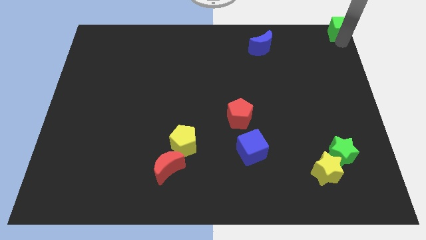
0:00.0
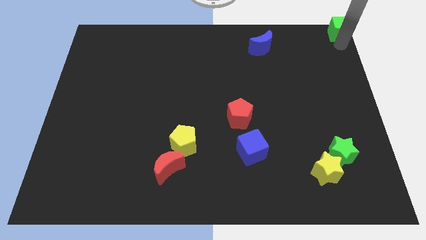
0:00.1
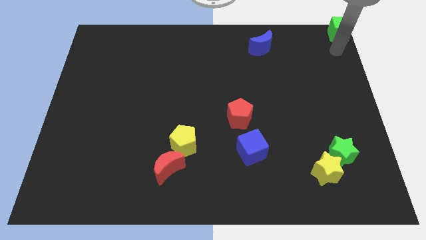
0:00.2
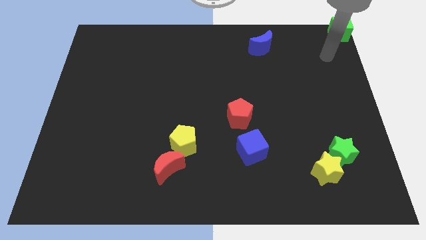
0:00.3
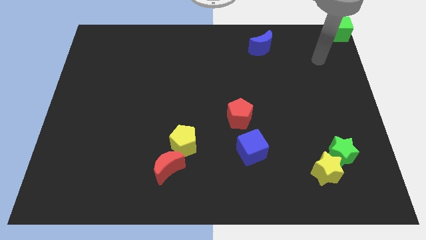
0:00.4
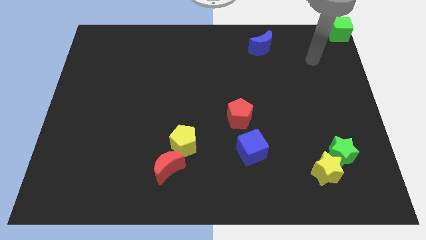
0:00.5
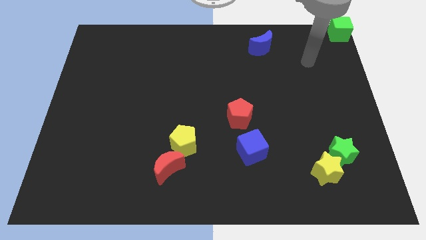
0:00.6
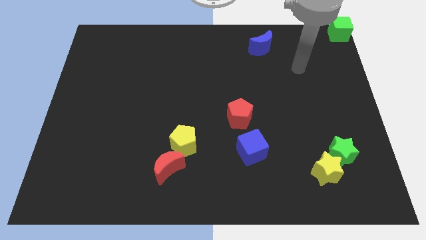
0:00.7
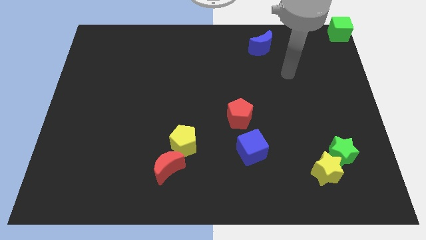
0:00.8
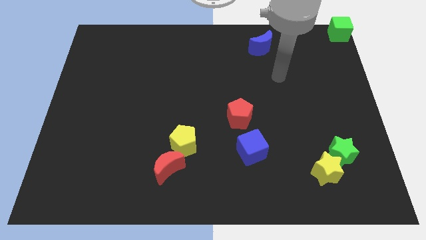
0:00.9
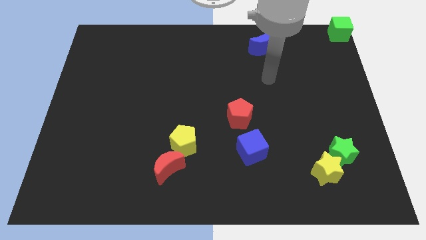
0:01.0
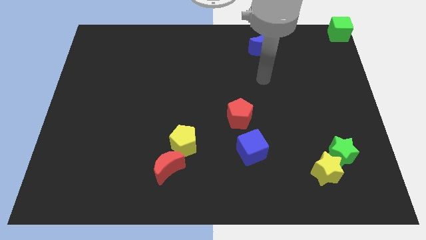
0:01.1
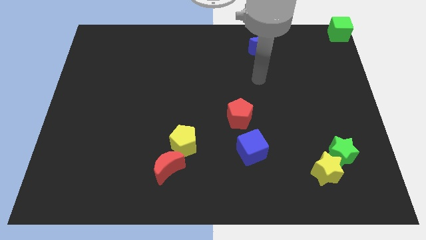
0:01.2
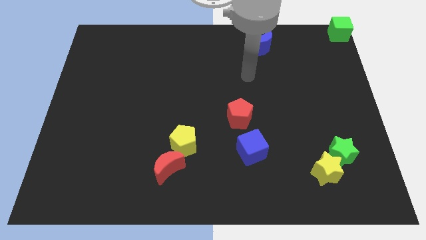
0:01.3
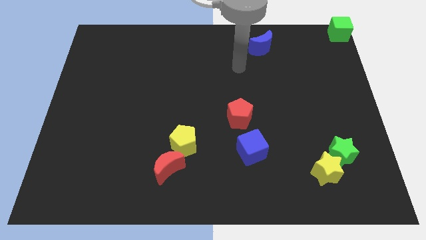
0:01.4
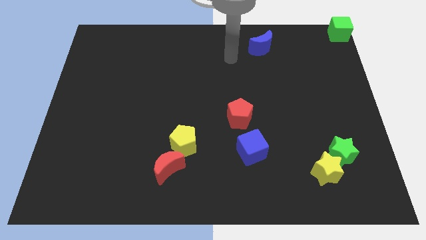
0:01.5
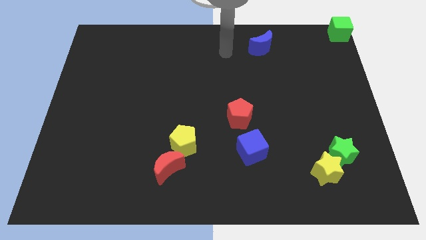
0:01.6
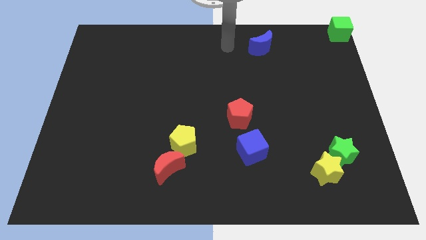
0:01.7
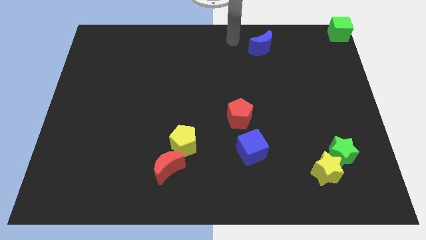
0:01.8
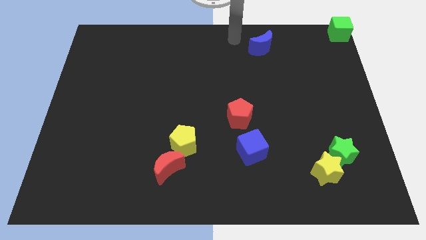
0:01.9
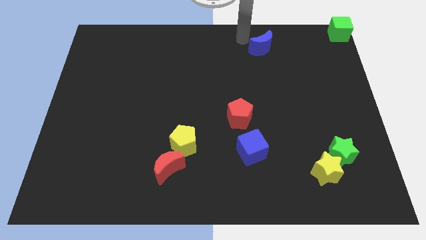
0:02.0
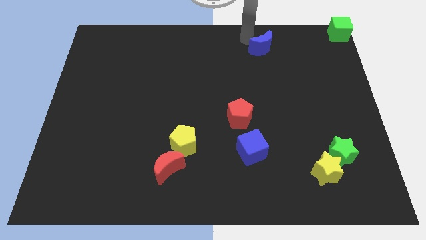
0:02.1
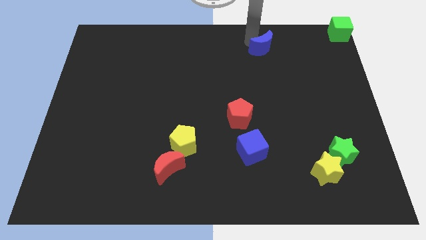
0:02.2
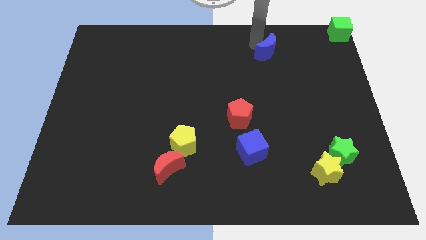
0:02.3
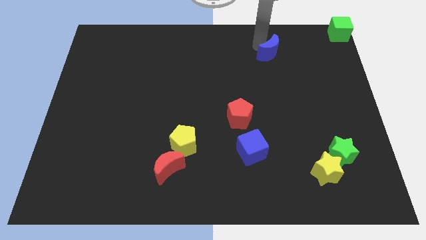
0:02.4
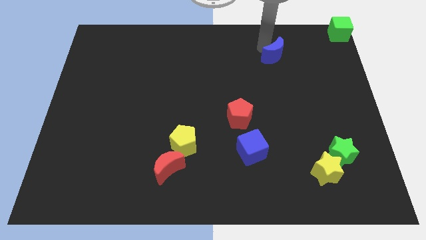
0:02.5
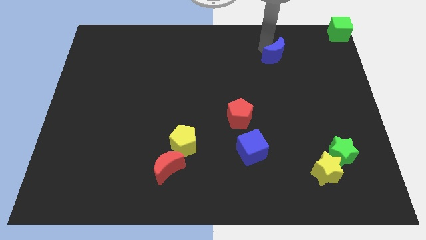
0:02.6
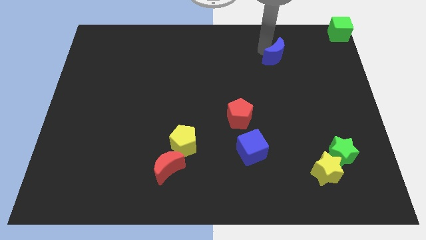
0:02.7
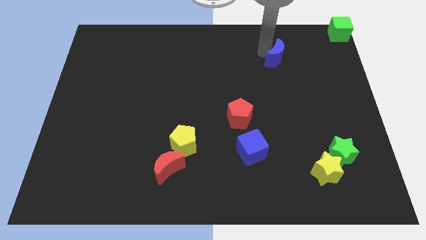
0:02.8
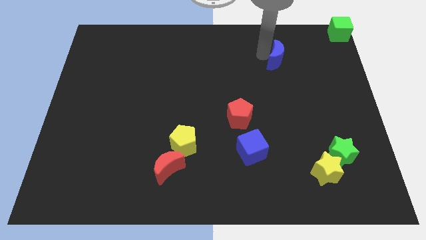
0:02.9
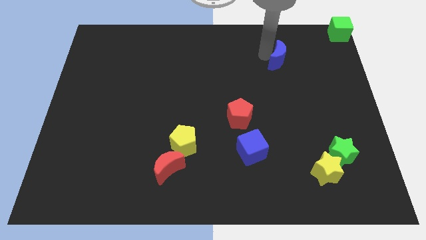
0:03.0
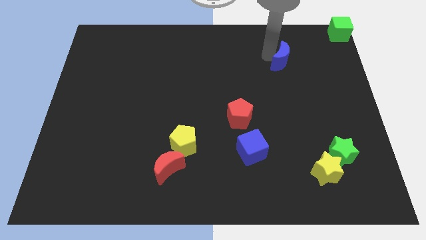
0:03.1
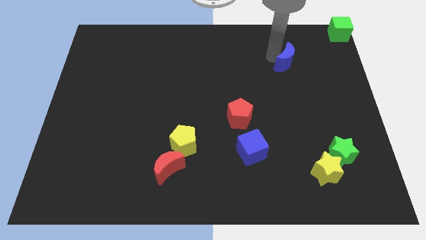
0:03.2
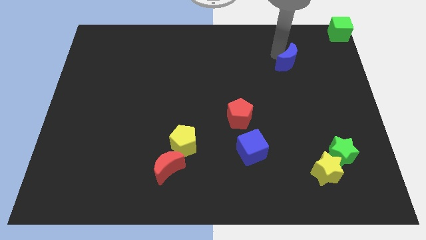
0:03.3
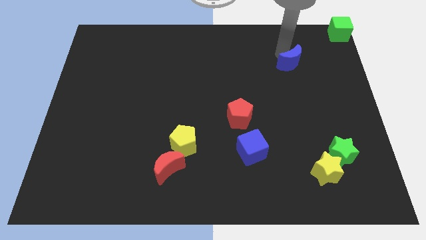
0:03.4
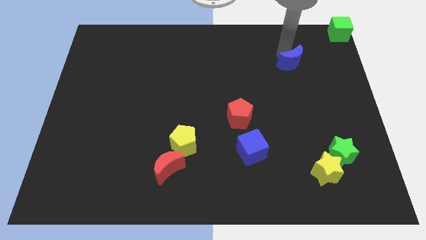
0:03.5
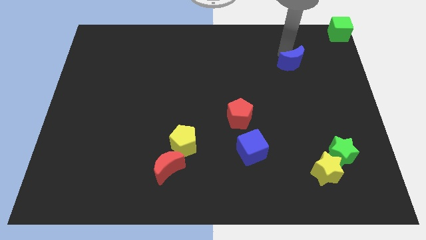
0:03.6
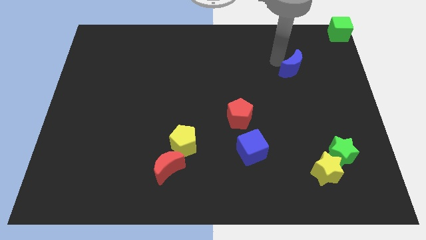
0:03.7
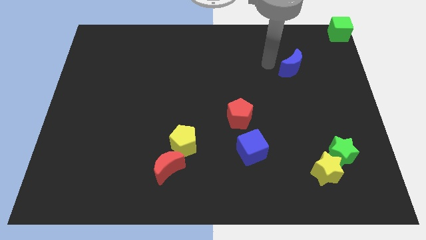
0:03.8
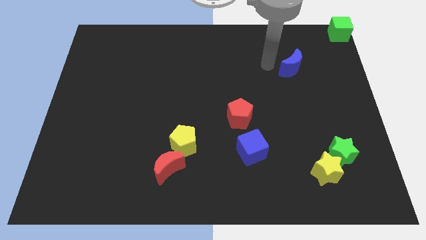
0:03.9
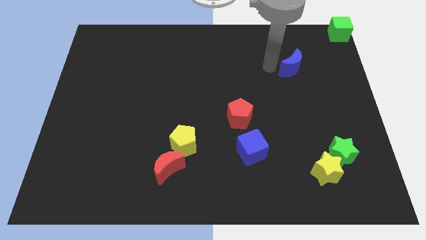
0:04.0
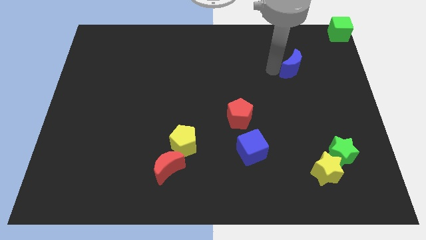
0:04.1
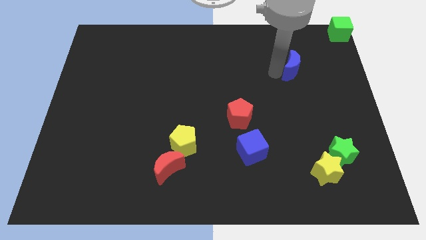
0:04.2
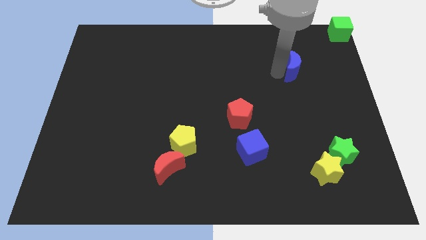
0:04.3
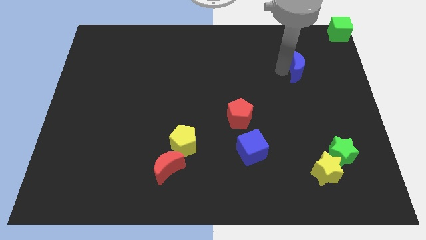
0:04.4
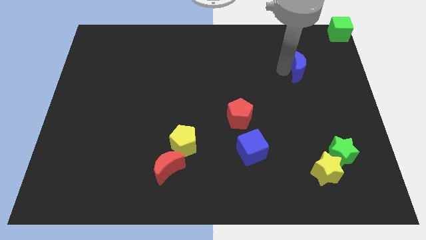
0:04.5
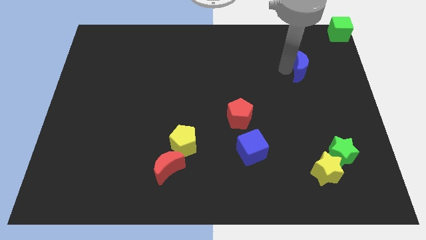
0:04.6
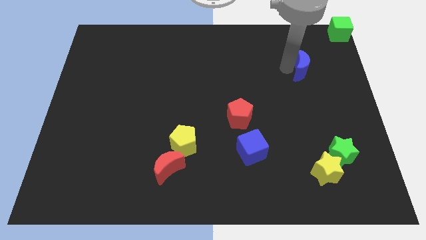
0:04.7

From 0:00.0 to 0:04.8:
place the blue moon diagonal to the green cube

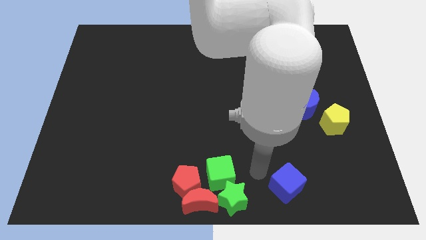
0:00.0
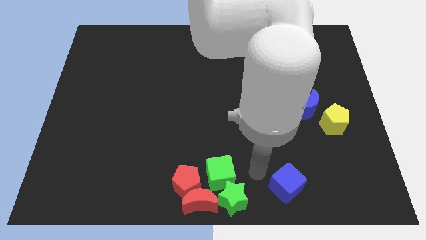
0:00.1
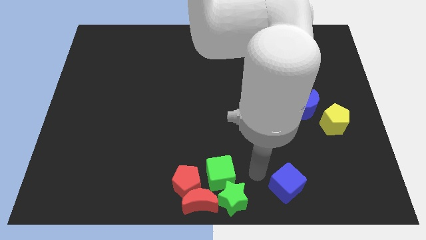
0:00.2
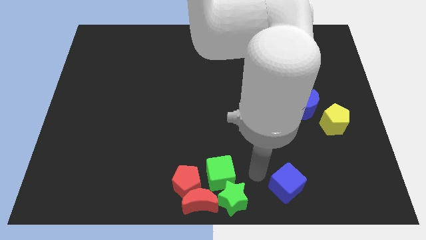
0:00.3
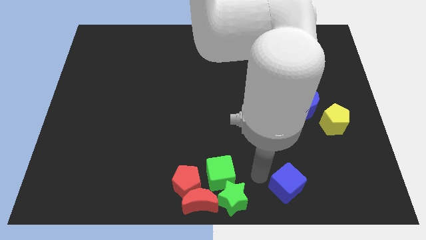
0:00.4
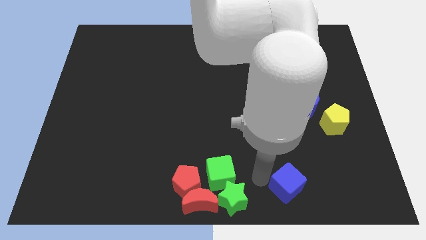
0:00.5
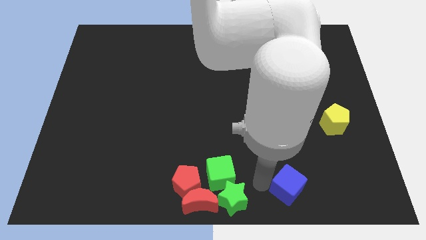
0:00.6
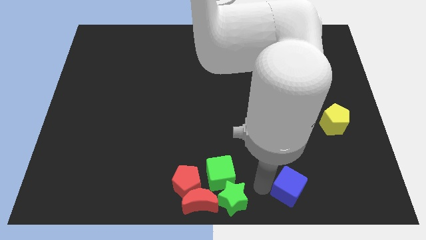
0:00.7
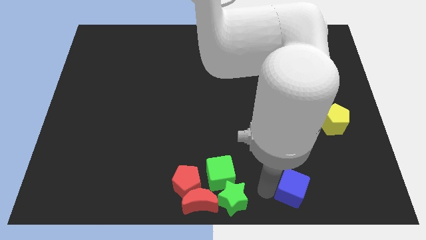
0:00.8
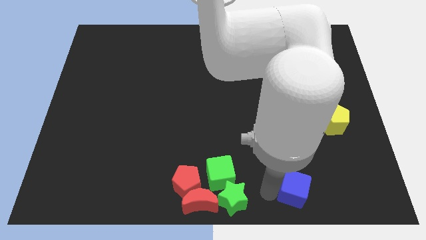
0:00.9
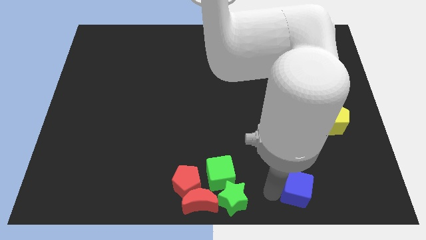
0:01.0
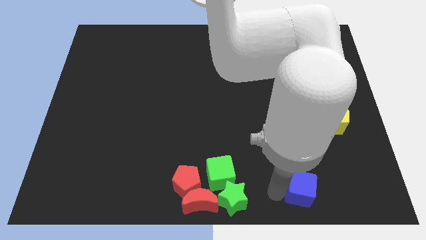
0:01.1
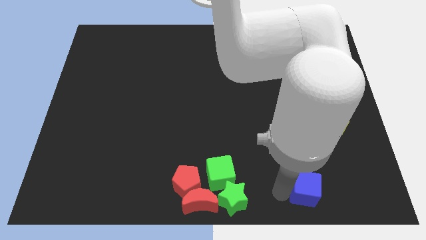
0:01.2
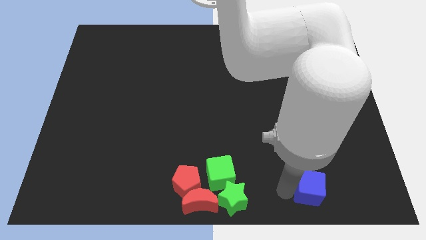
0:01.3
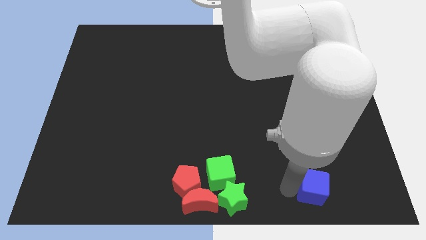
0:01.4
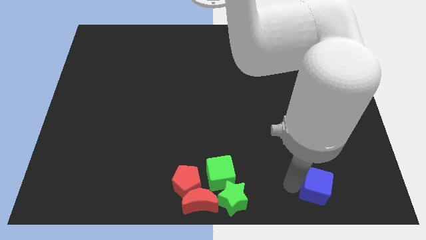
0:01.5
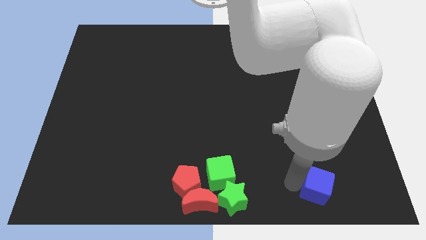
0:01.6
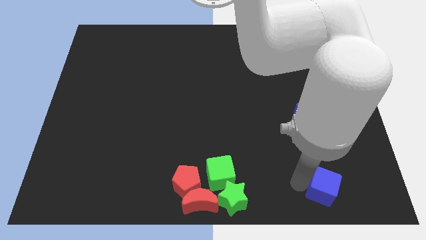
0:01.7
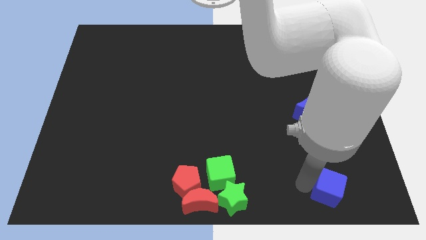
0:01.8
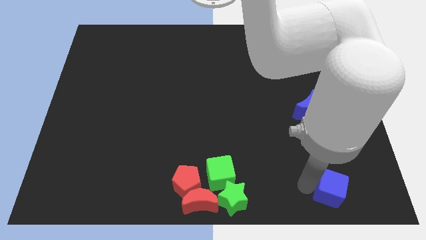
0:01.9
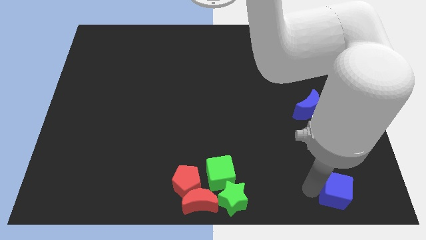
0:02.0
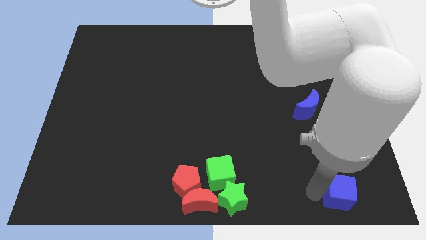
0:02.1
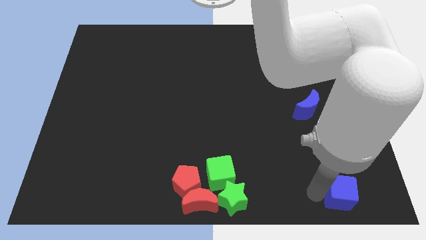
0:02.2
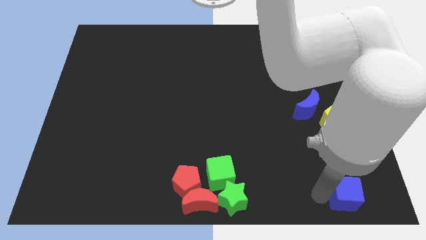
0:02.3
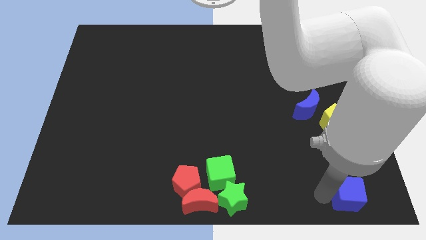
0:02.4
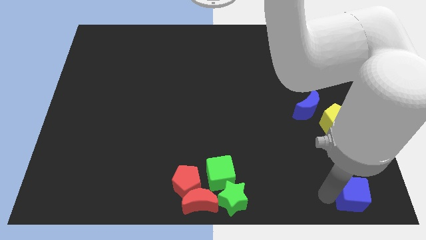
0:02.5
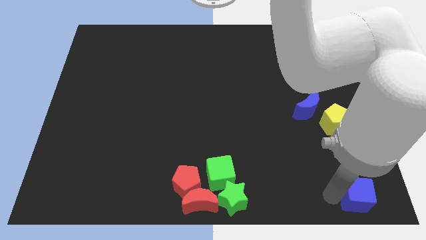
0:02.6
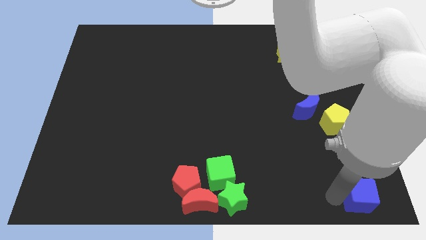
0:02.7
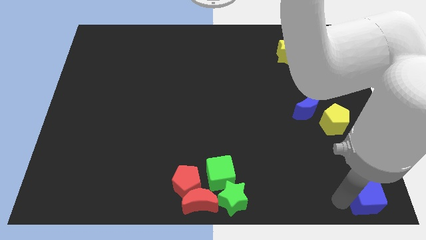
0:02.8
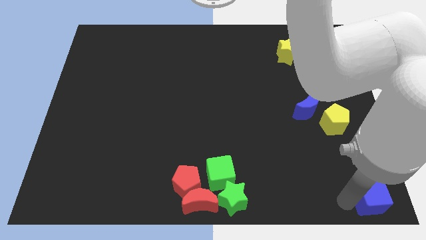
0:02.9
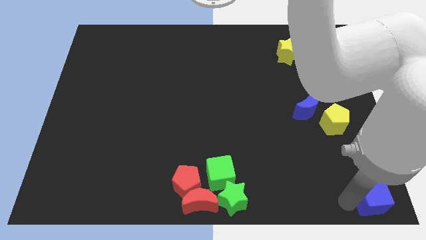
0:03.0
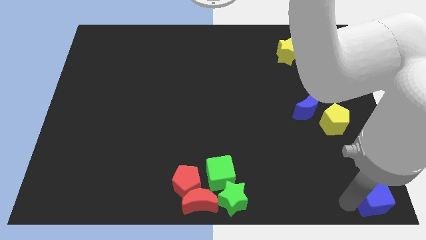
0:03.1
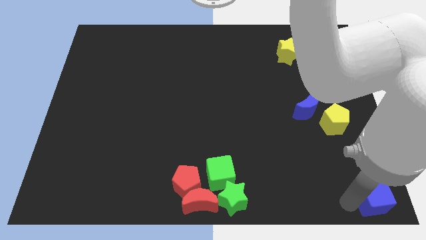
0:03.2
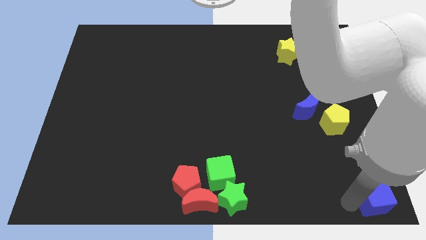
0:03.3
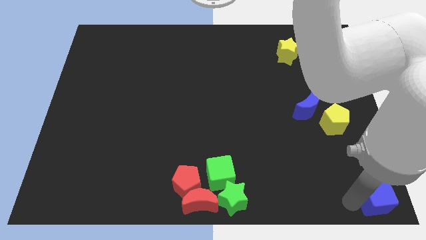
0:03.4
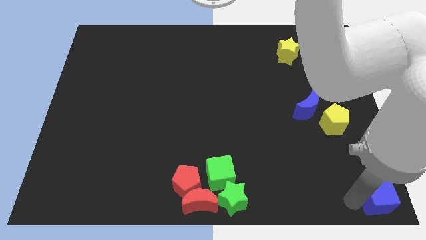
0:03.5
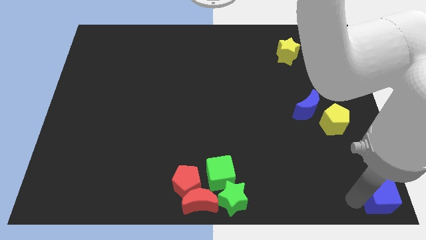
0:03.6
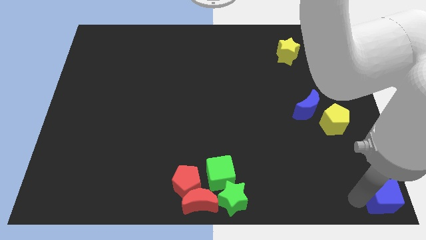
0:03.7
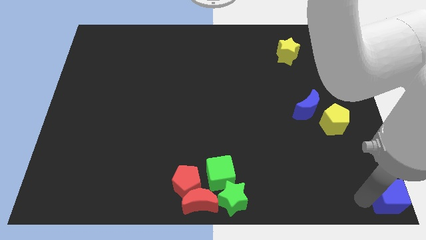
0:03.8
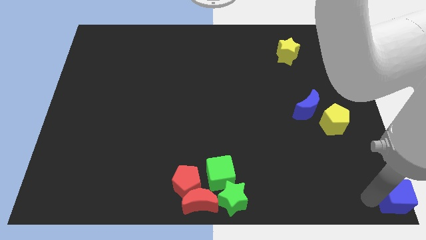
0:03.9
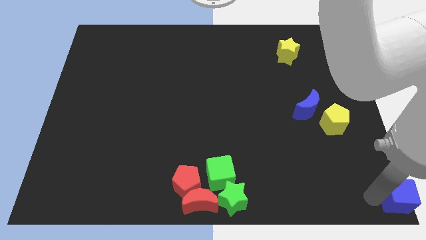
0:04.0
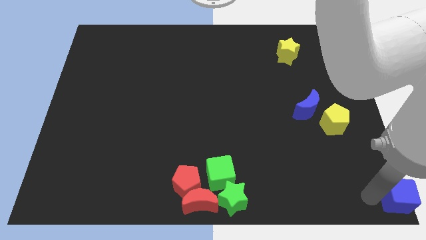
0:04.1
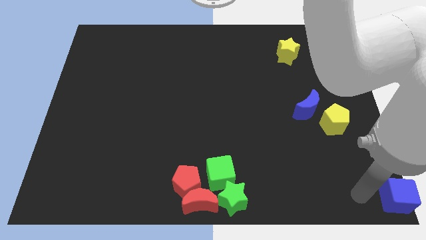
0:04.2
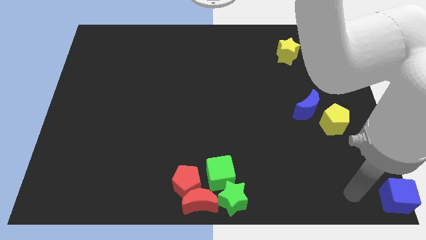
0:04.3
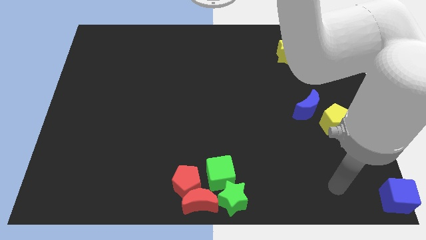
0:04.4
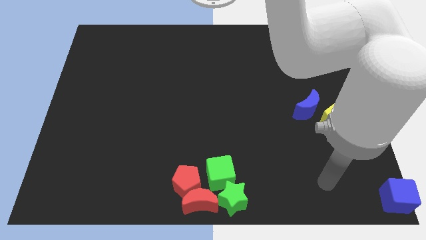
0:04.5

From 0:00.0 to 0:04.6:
push blue cube to right bottom of the board
